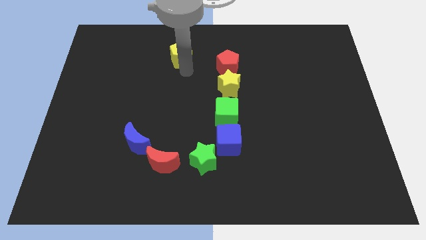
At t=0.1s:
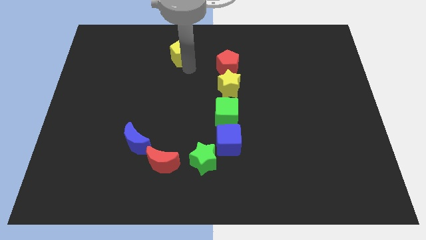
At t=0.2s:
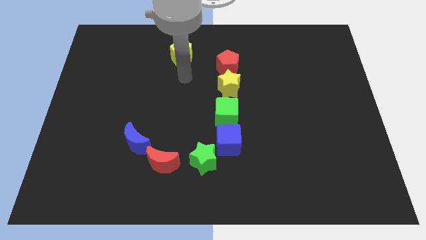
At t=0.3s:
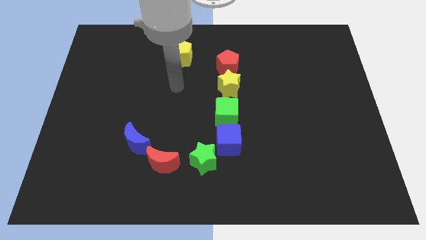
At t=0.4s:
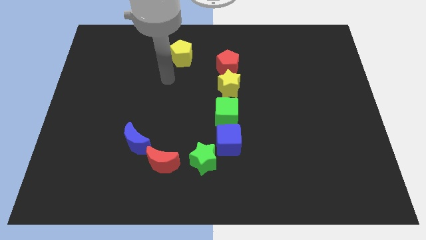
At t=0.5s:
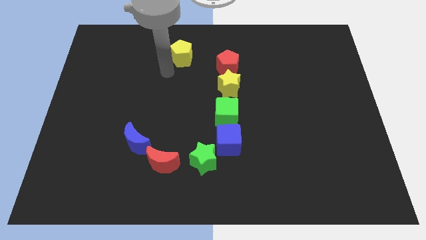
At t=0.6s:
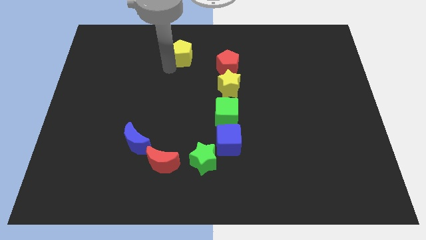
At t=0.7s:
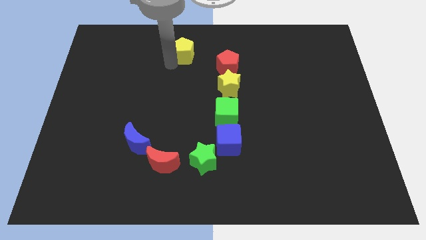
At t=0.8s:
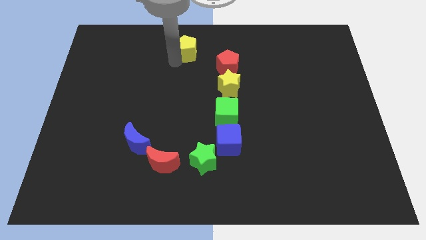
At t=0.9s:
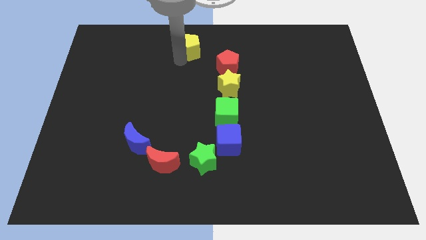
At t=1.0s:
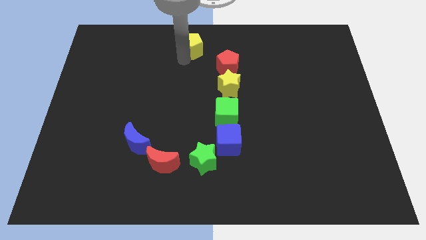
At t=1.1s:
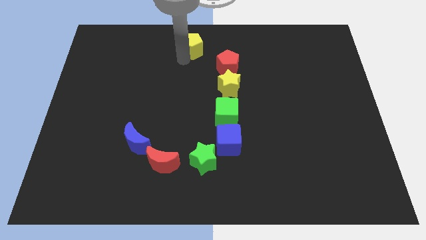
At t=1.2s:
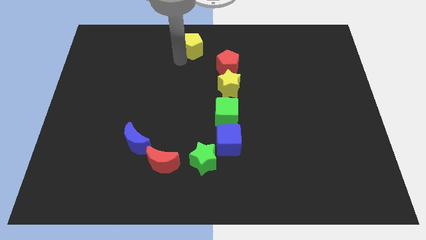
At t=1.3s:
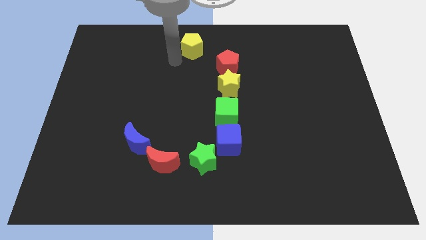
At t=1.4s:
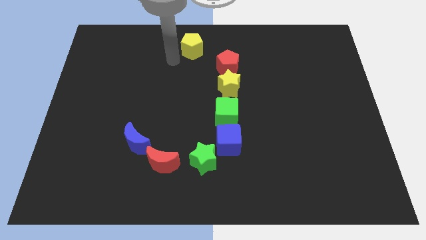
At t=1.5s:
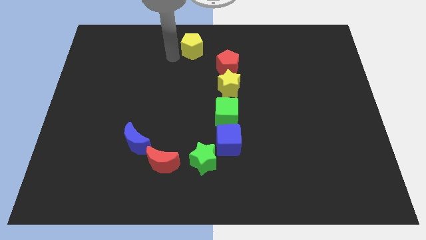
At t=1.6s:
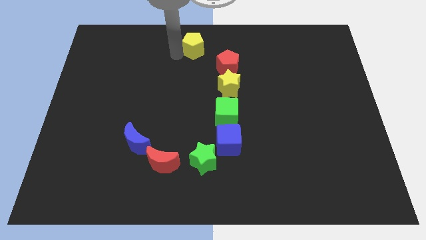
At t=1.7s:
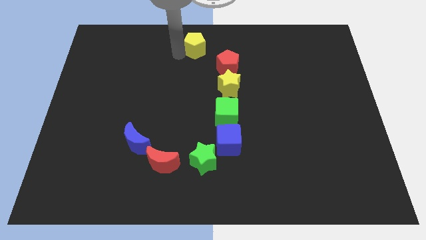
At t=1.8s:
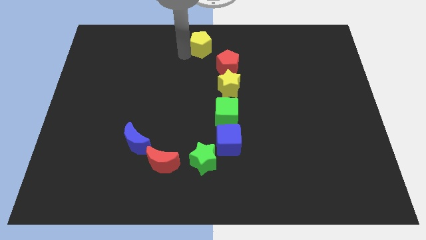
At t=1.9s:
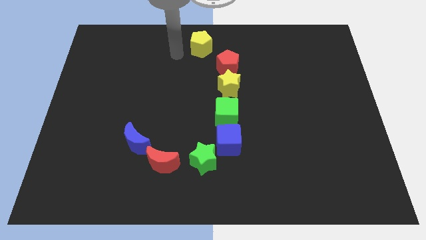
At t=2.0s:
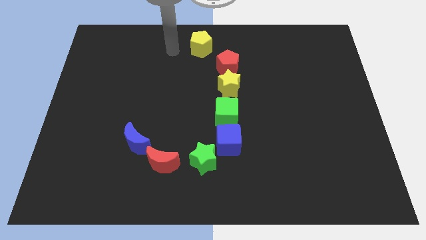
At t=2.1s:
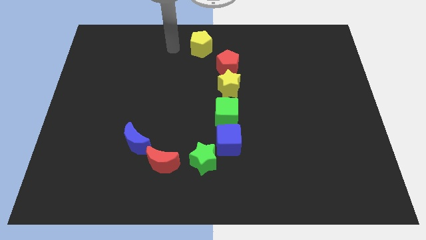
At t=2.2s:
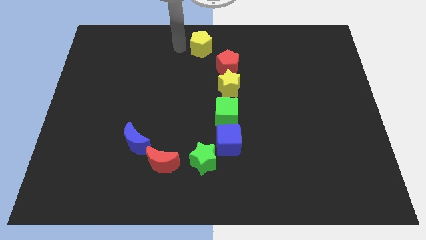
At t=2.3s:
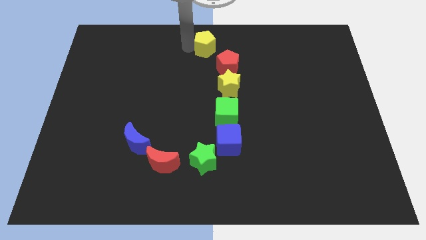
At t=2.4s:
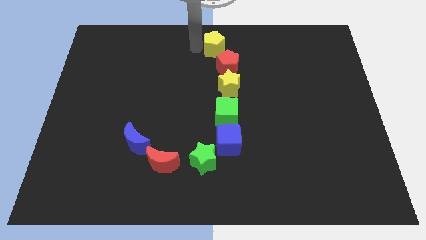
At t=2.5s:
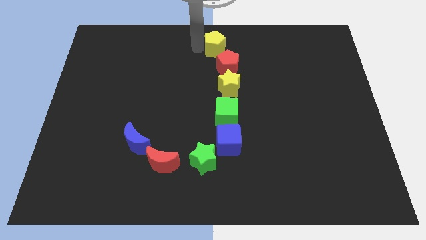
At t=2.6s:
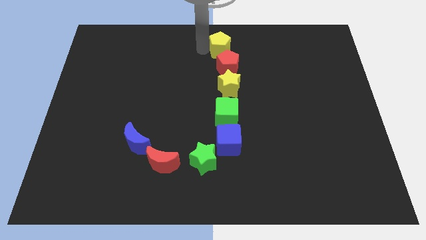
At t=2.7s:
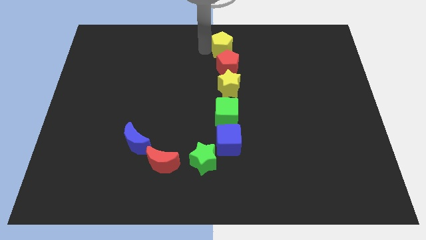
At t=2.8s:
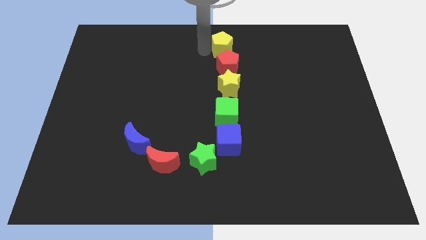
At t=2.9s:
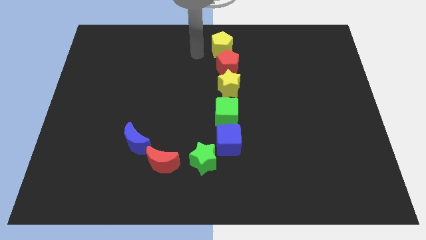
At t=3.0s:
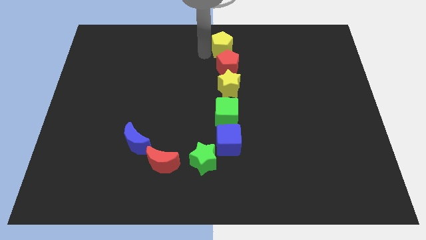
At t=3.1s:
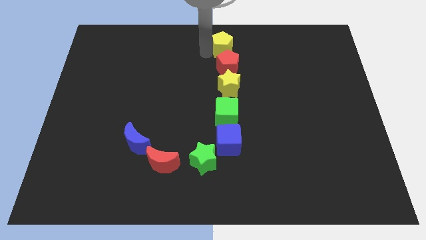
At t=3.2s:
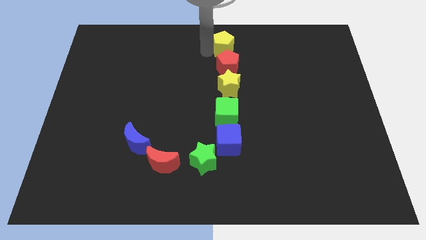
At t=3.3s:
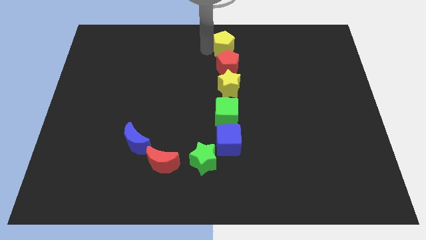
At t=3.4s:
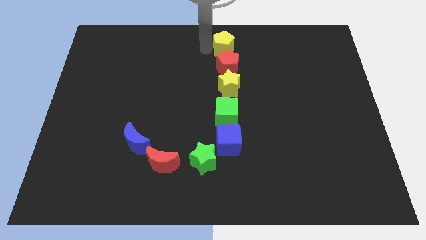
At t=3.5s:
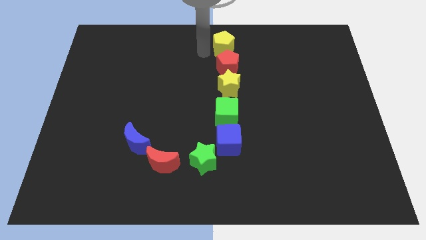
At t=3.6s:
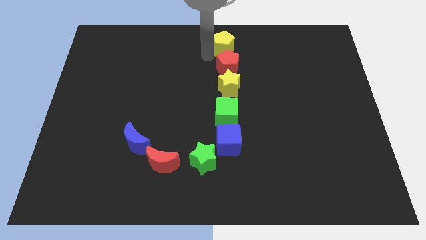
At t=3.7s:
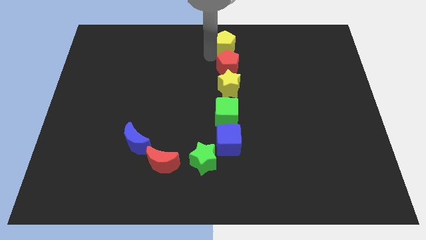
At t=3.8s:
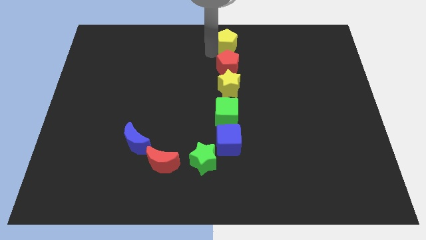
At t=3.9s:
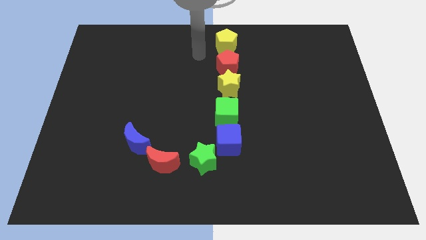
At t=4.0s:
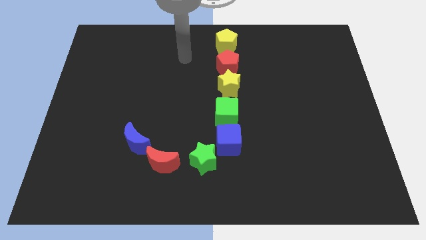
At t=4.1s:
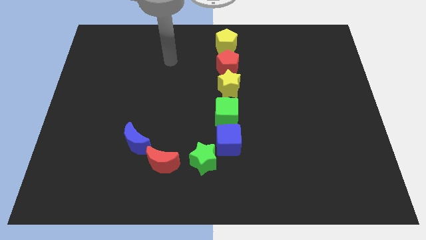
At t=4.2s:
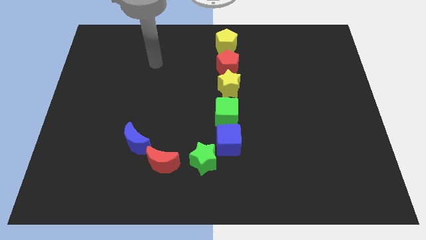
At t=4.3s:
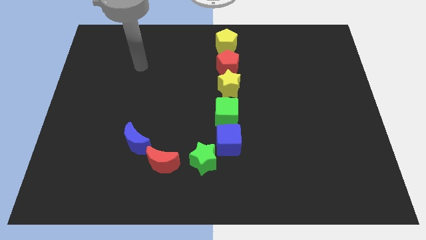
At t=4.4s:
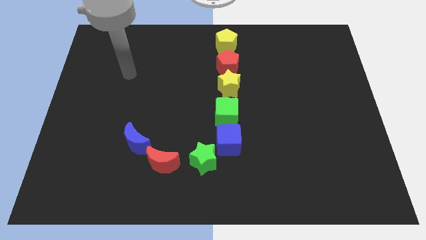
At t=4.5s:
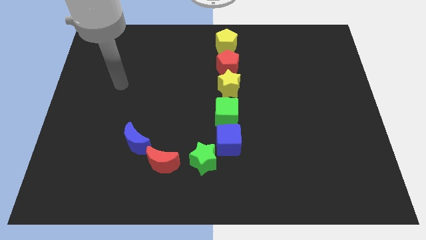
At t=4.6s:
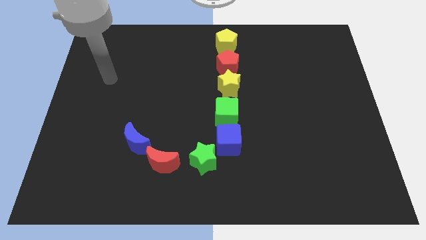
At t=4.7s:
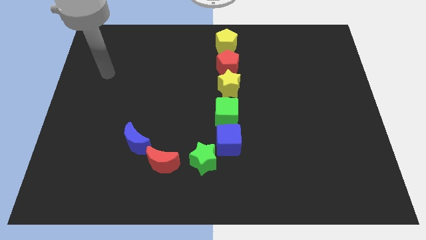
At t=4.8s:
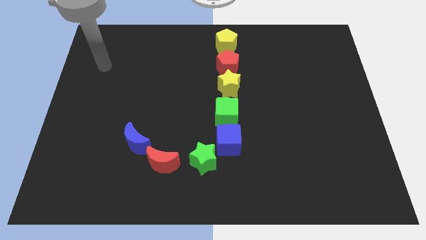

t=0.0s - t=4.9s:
place yellow pentagon above red pentagon

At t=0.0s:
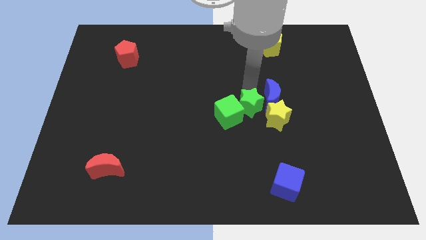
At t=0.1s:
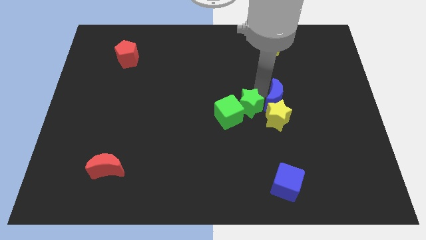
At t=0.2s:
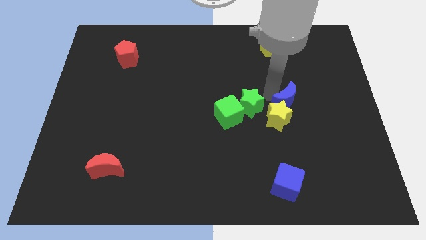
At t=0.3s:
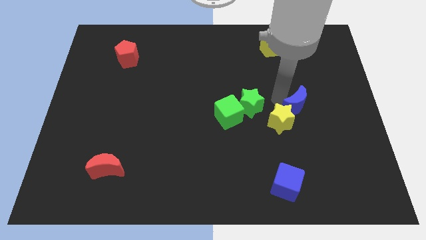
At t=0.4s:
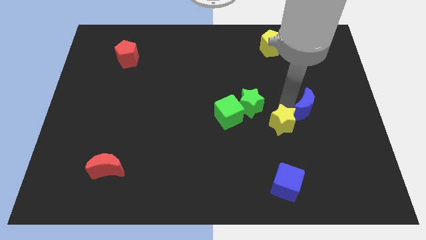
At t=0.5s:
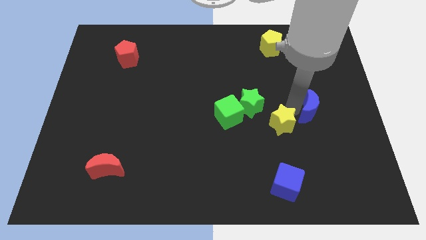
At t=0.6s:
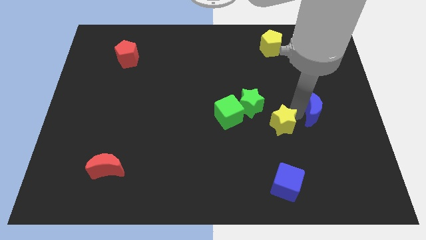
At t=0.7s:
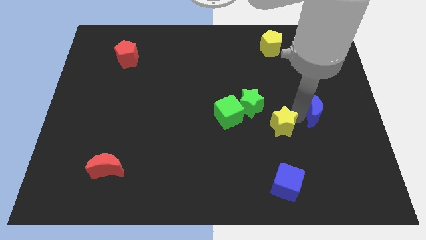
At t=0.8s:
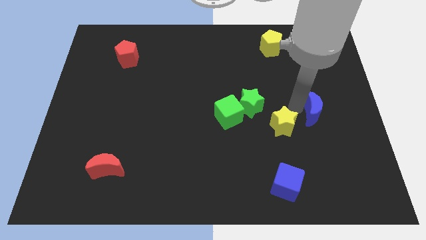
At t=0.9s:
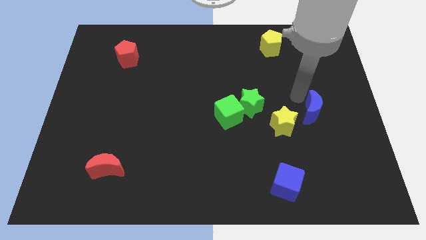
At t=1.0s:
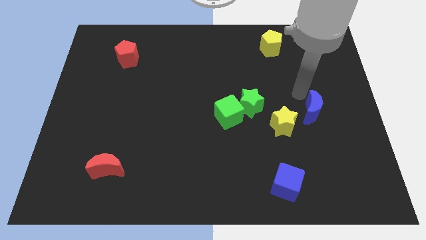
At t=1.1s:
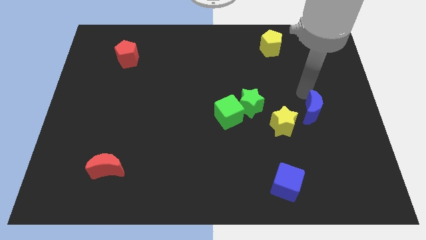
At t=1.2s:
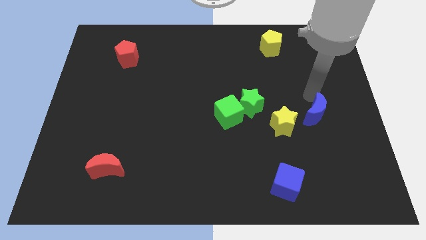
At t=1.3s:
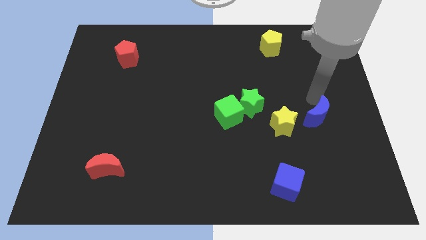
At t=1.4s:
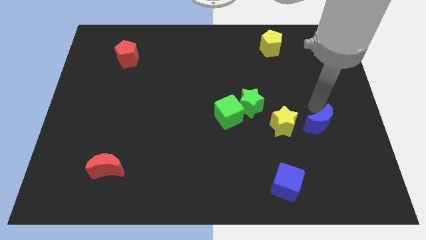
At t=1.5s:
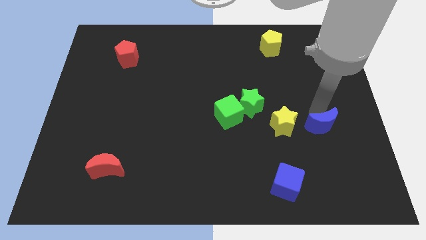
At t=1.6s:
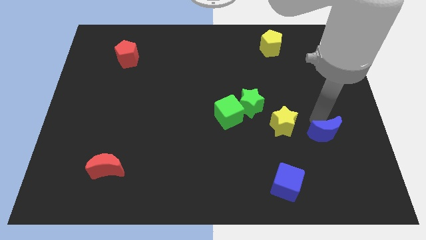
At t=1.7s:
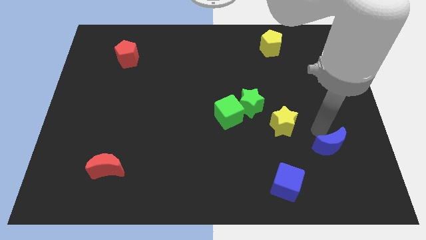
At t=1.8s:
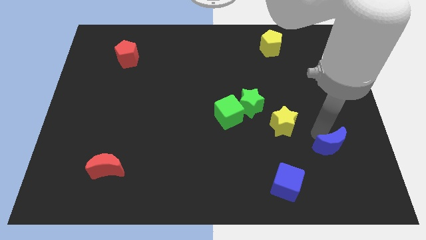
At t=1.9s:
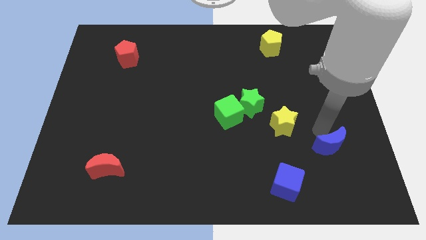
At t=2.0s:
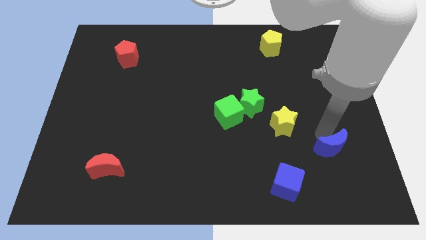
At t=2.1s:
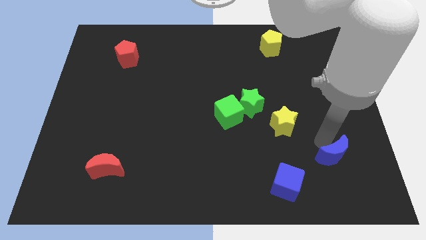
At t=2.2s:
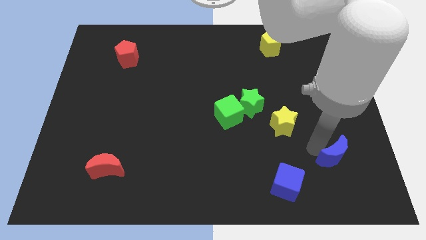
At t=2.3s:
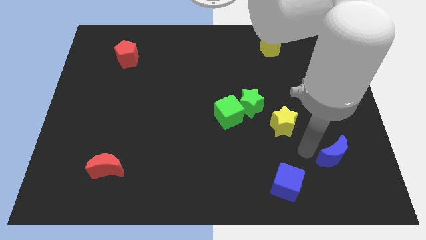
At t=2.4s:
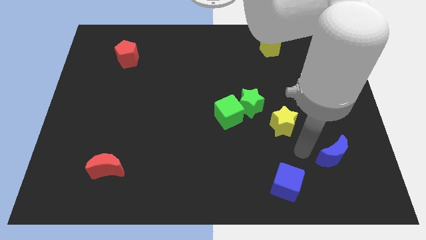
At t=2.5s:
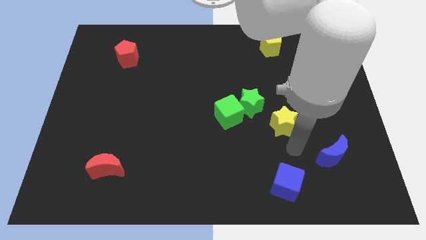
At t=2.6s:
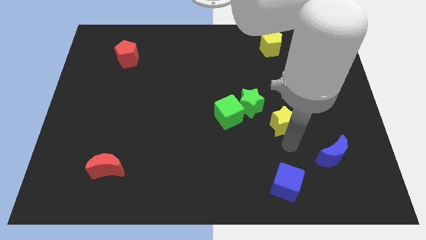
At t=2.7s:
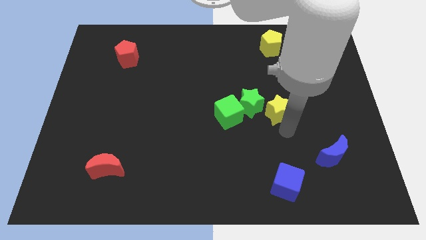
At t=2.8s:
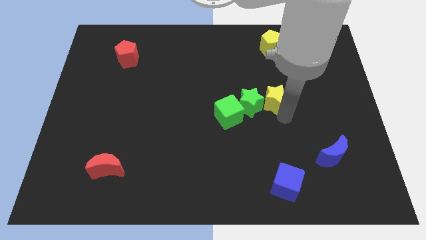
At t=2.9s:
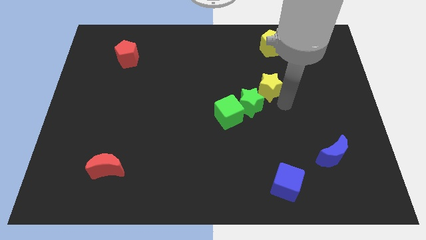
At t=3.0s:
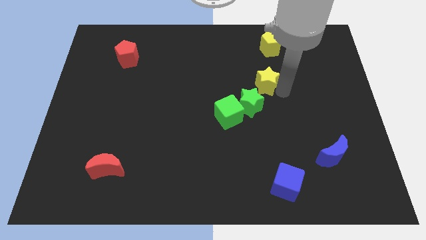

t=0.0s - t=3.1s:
separate yellow star and blue moon from each other

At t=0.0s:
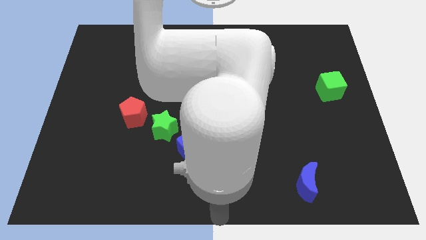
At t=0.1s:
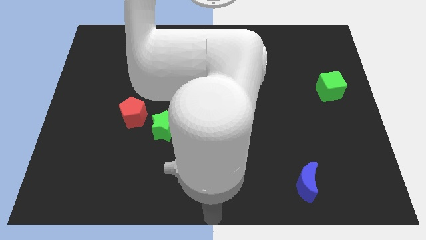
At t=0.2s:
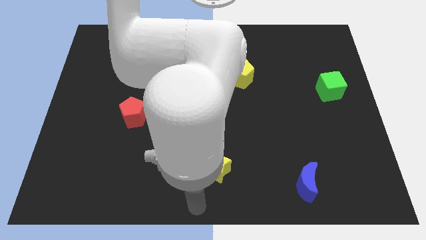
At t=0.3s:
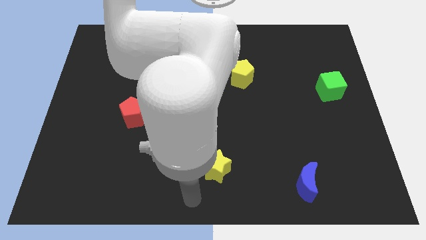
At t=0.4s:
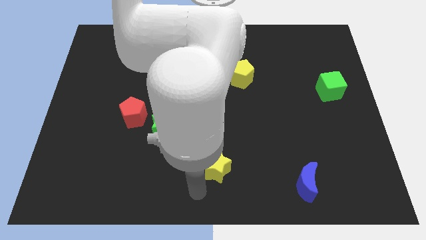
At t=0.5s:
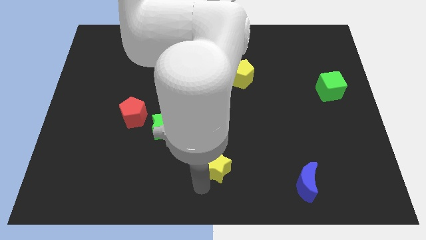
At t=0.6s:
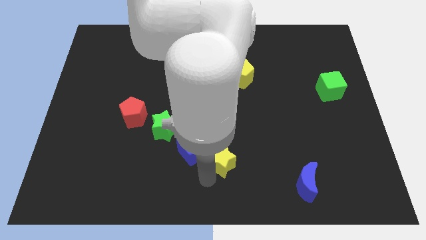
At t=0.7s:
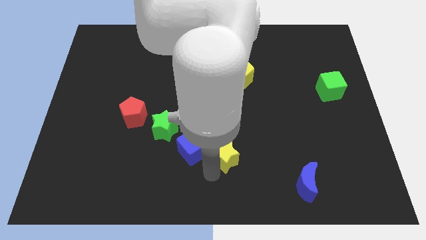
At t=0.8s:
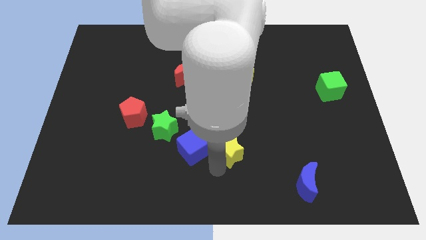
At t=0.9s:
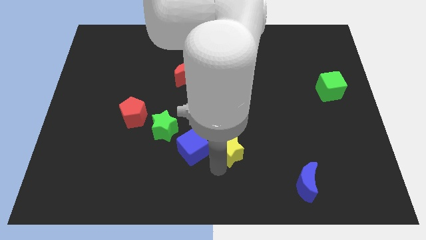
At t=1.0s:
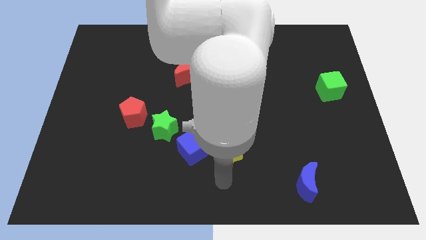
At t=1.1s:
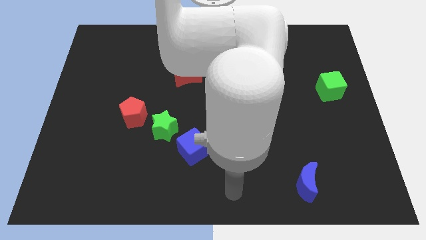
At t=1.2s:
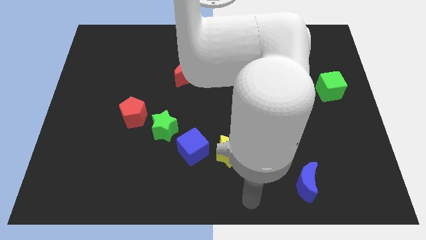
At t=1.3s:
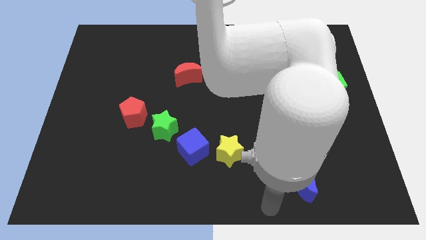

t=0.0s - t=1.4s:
put the yellow star right to the blue cube
